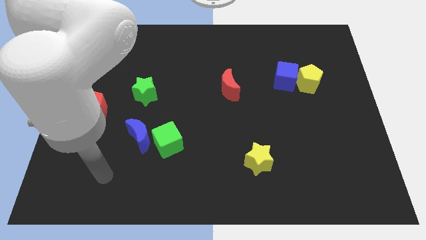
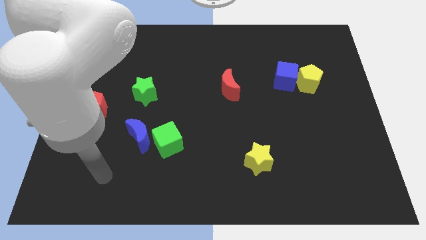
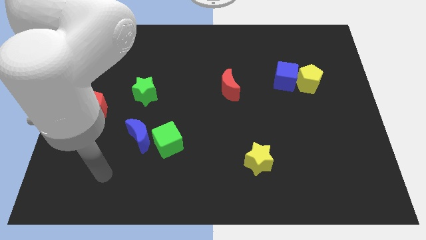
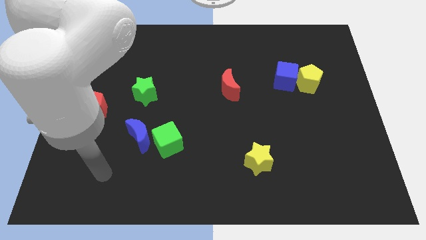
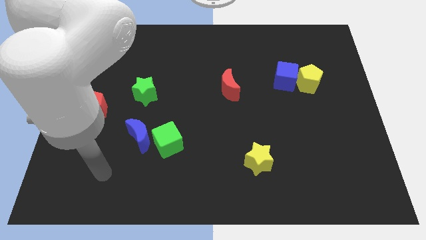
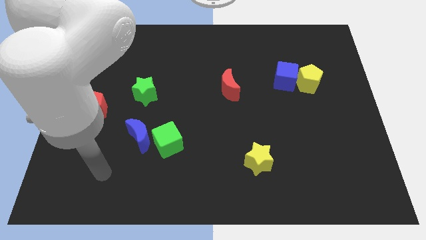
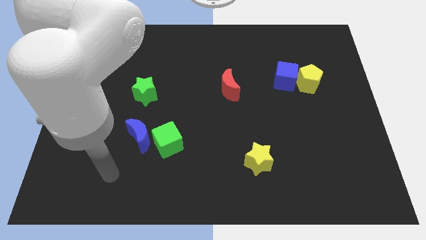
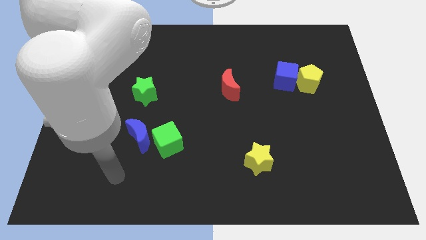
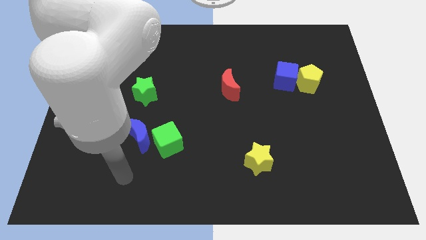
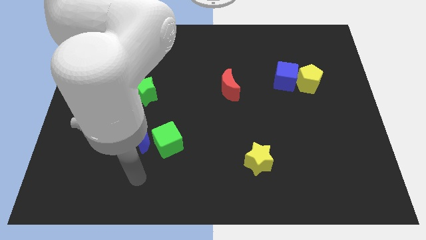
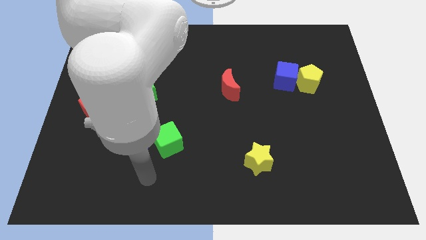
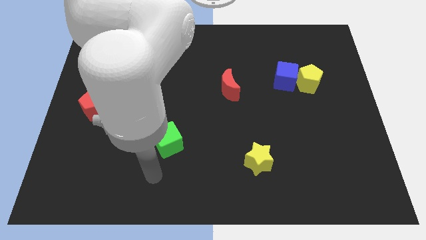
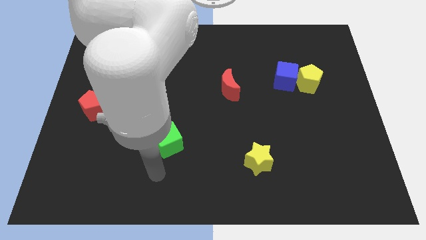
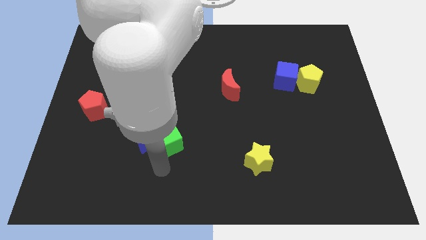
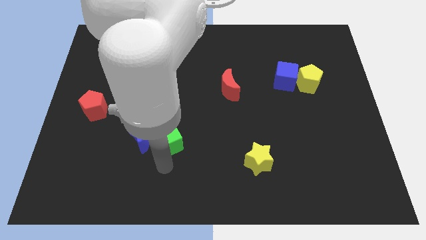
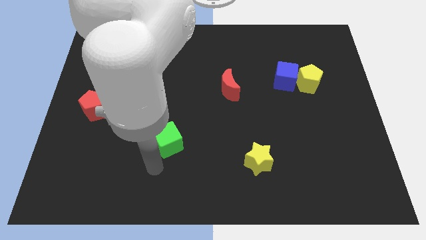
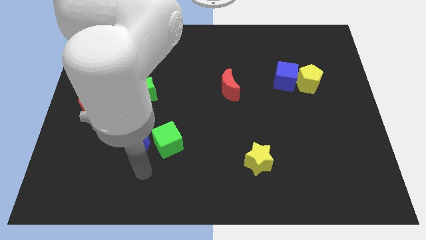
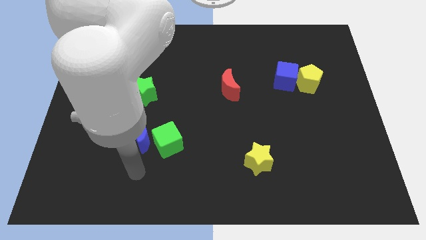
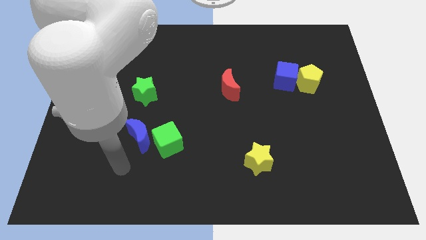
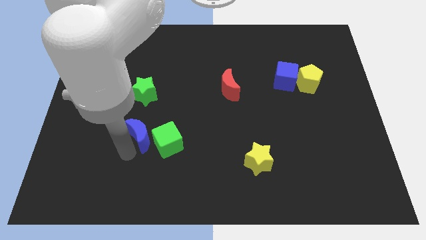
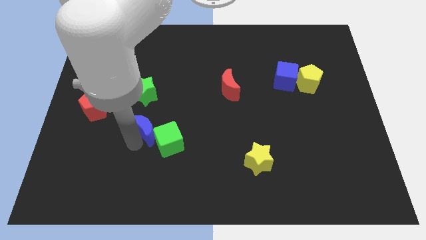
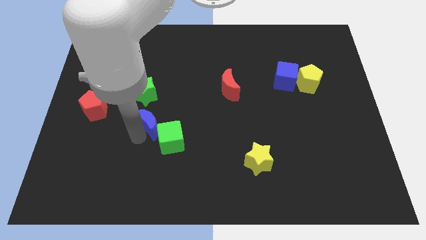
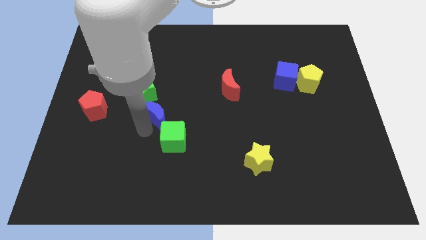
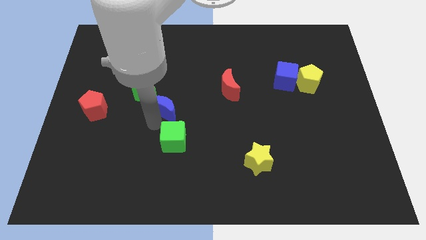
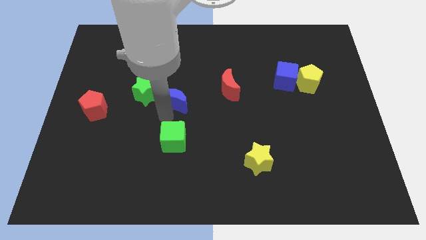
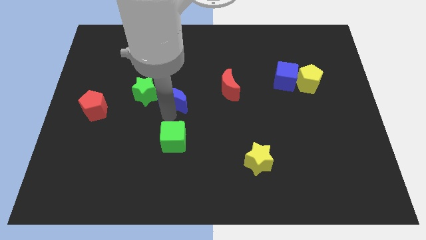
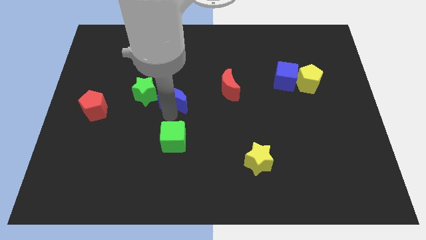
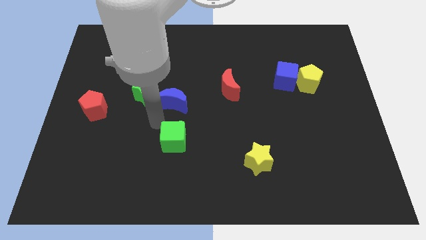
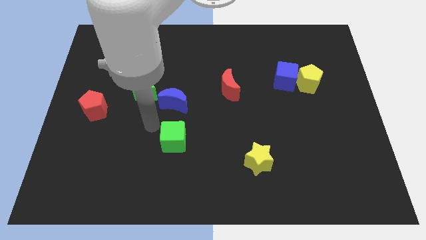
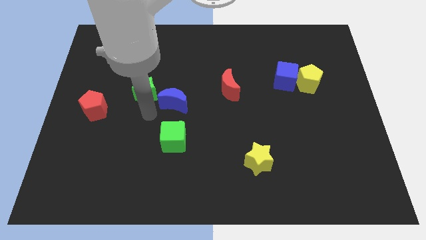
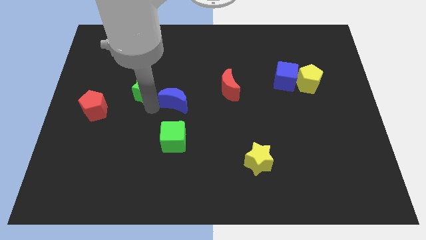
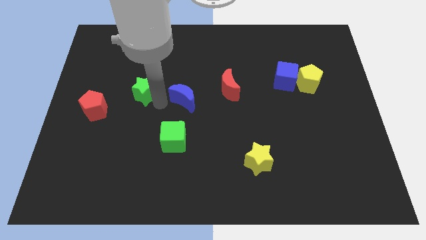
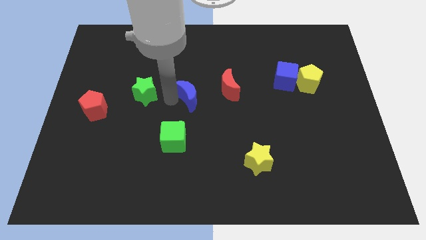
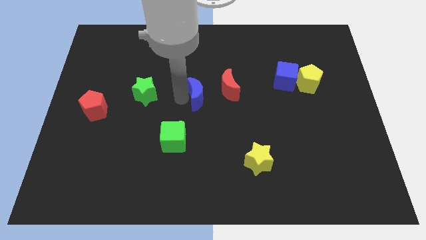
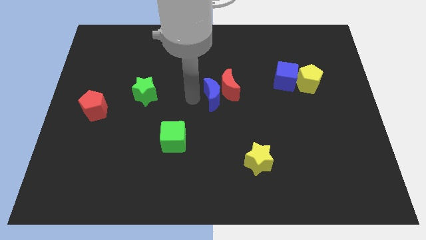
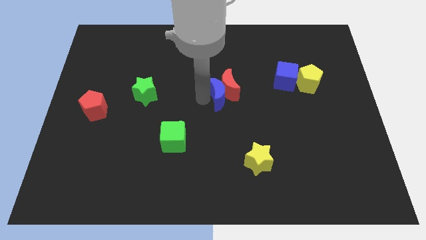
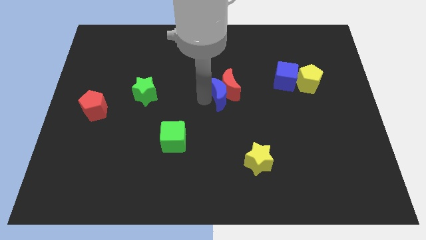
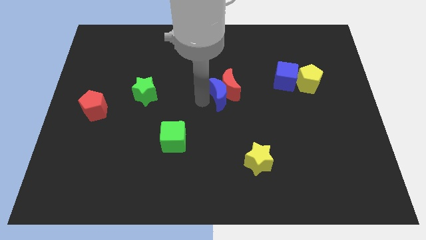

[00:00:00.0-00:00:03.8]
move the blue crescent into the left side of the red moon

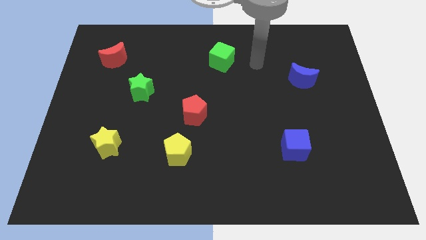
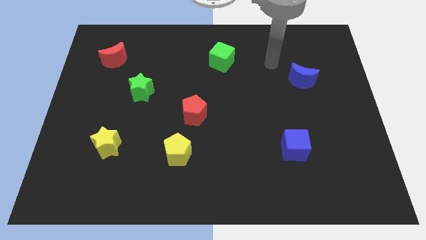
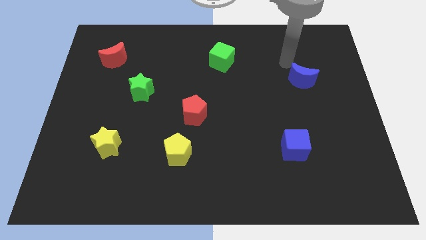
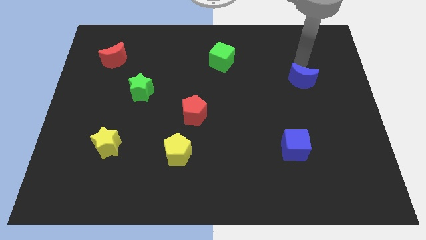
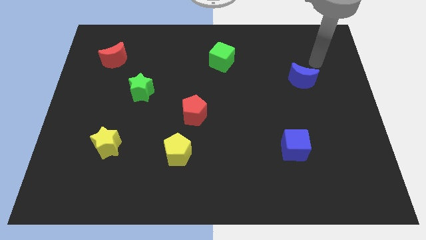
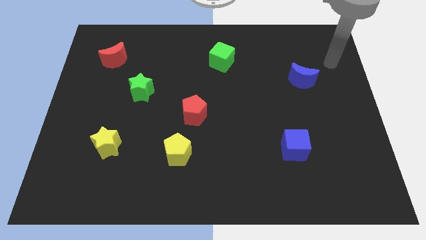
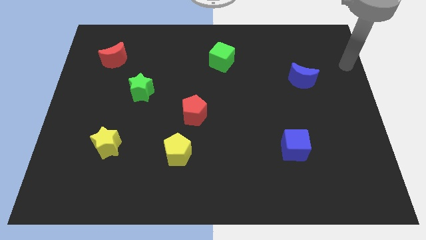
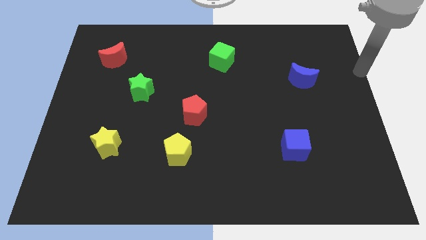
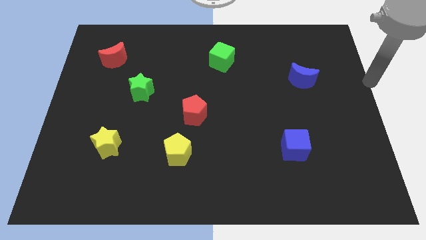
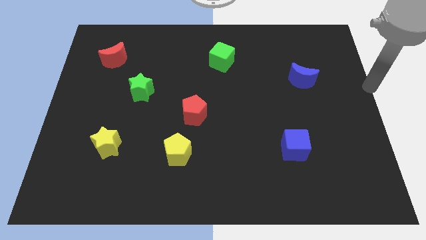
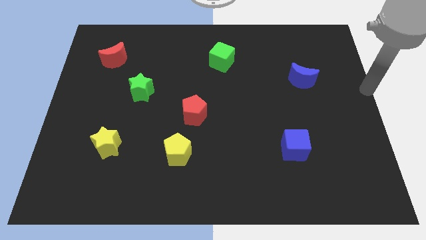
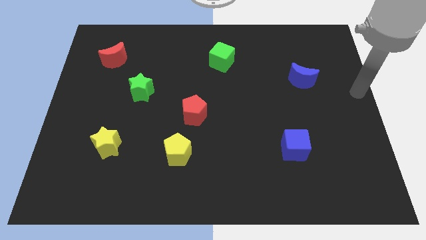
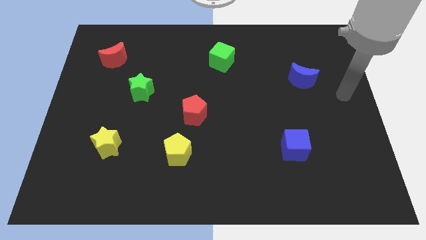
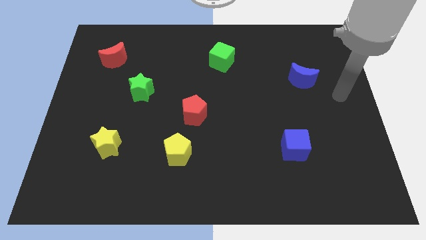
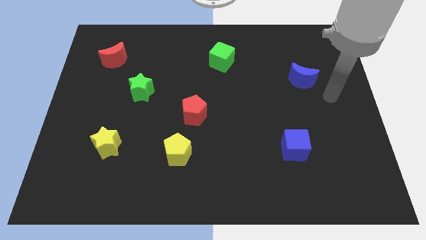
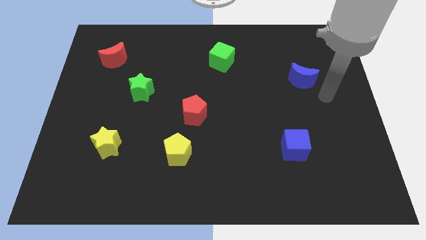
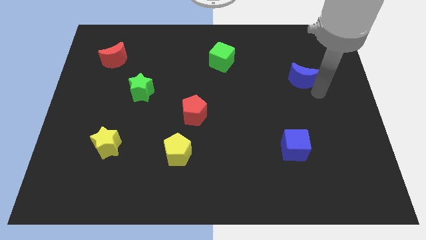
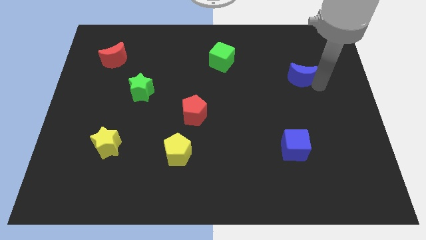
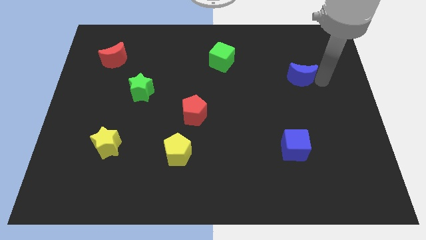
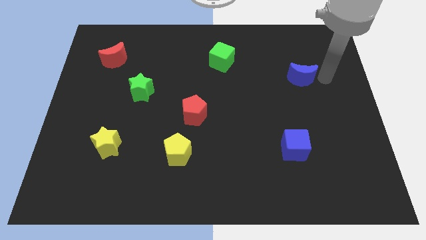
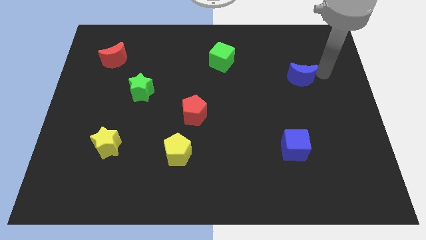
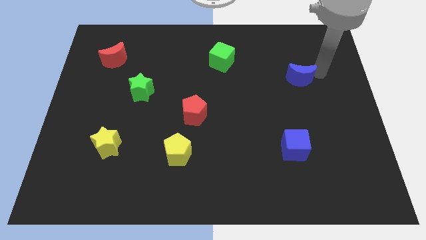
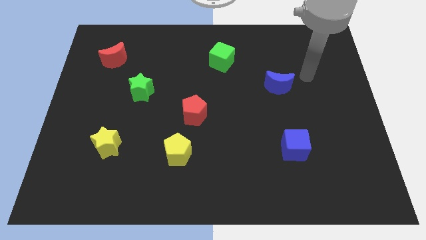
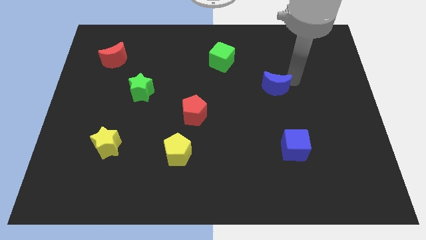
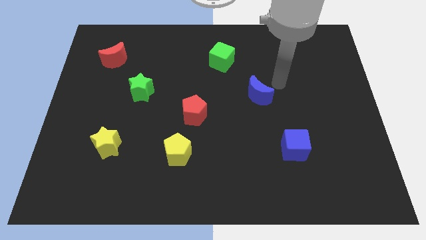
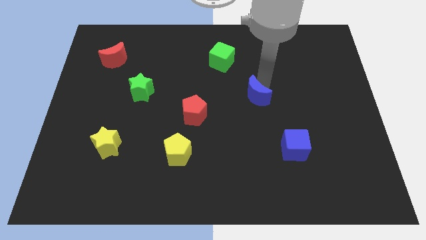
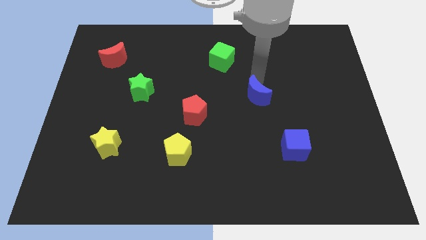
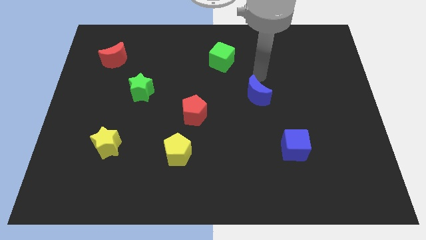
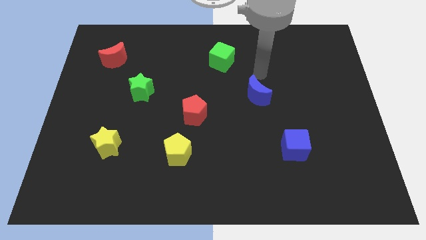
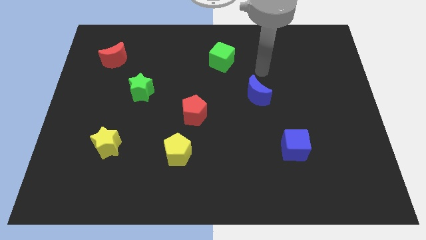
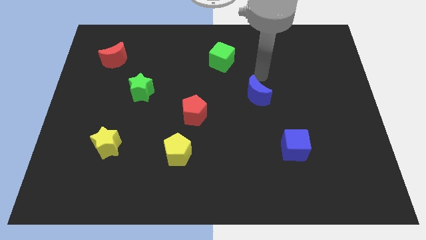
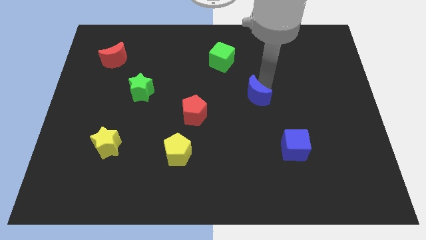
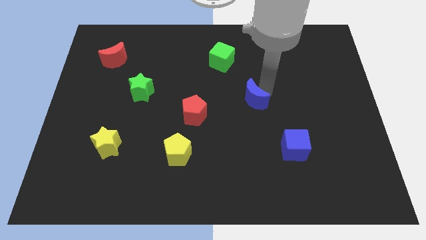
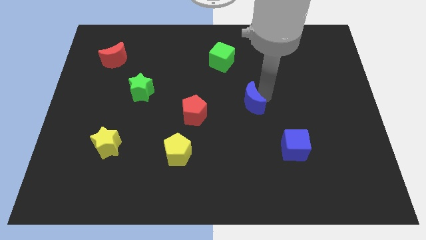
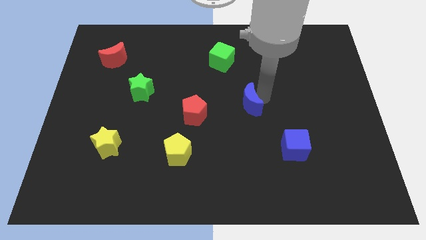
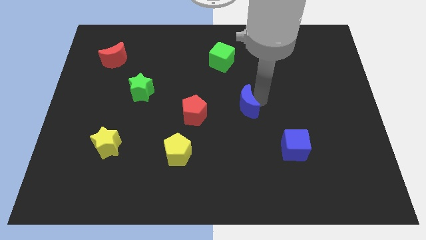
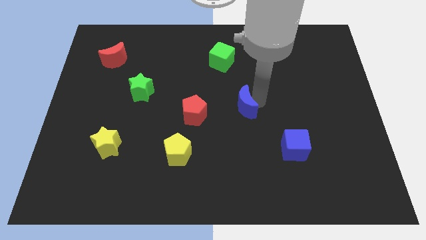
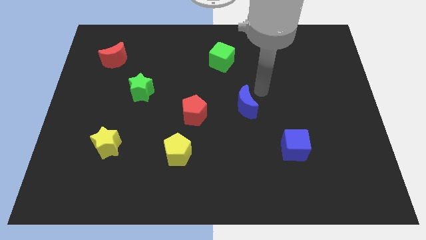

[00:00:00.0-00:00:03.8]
push the blue crescent to the center of the board

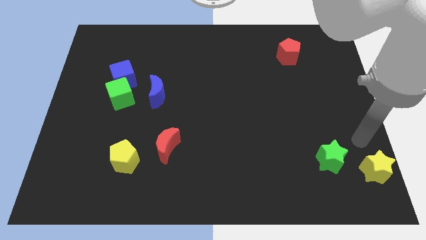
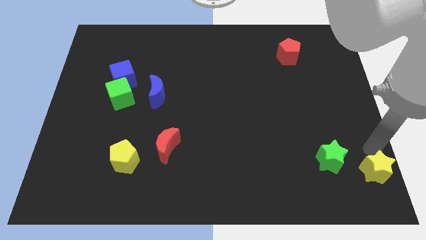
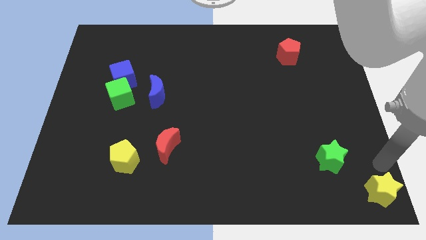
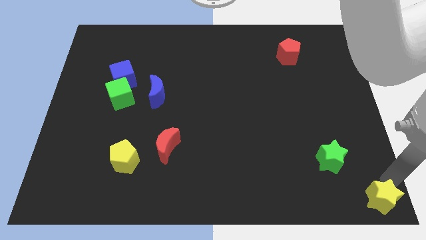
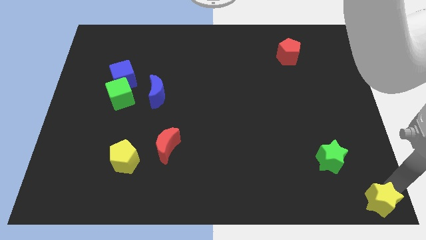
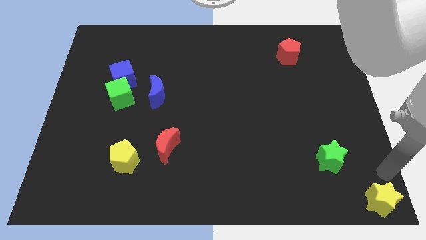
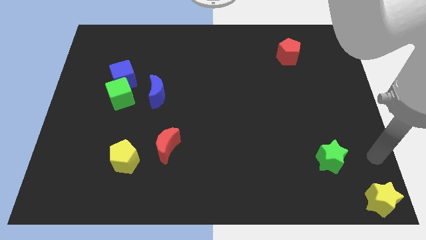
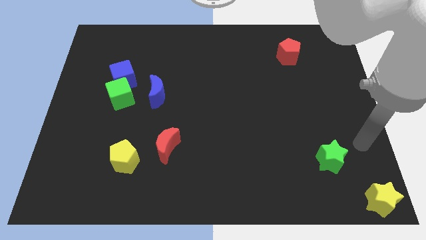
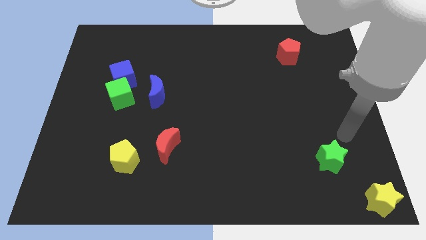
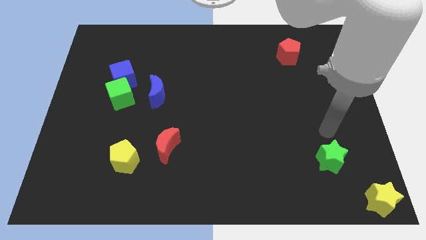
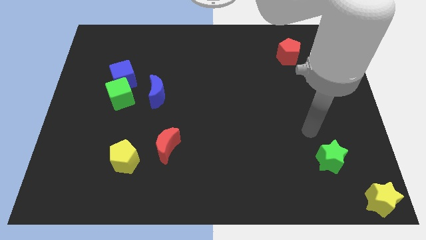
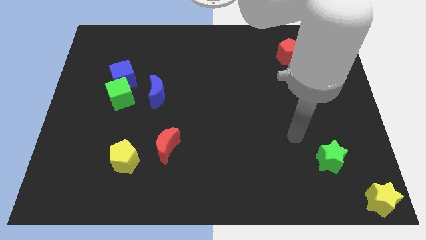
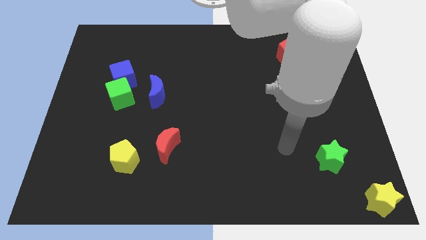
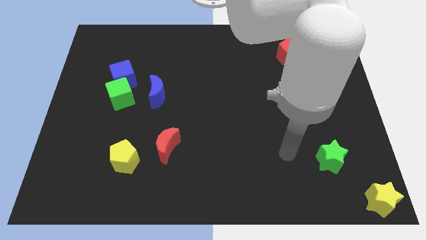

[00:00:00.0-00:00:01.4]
move the yellow star to the right bottom corner of the board
